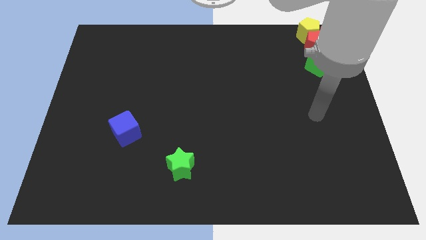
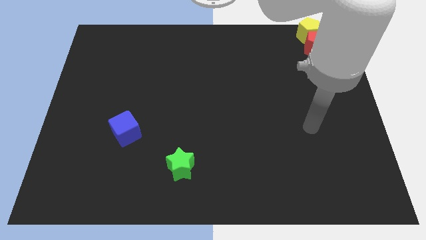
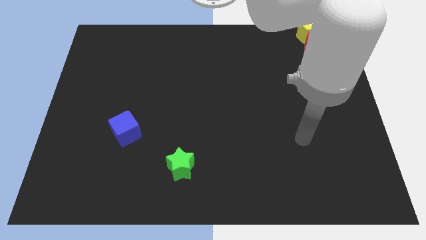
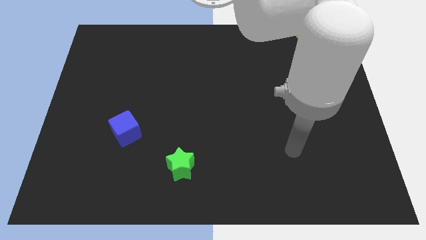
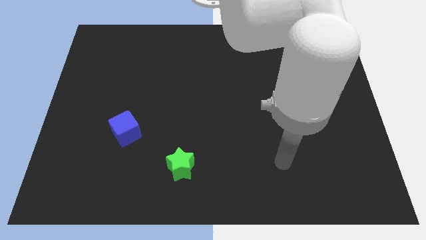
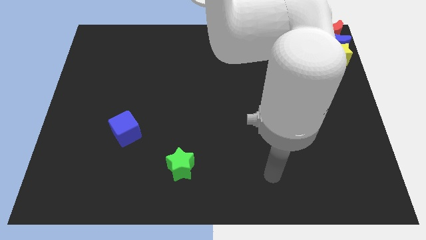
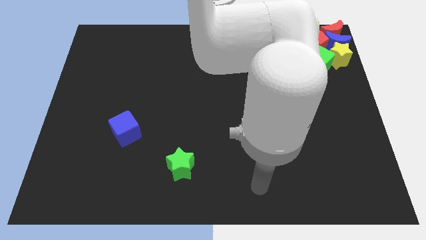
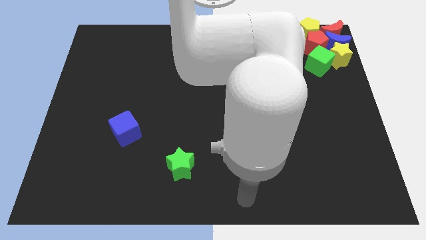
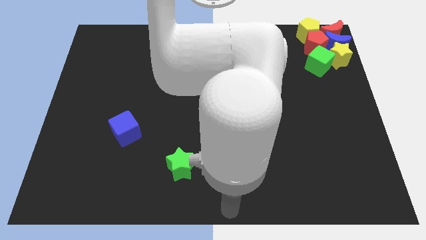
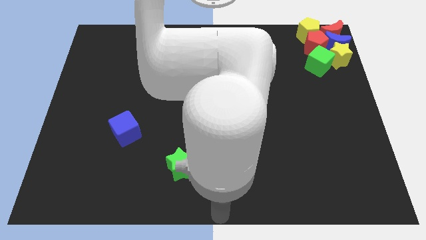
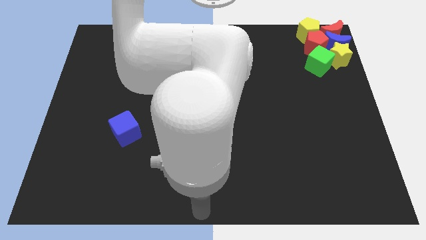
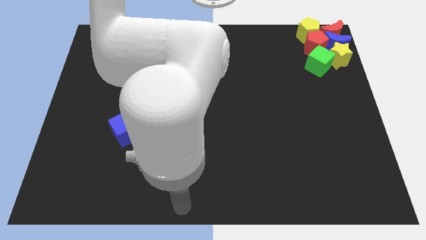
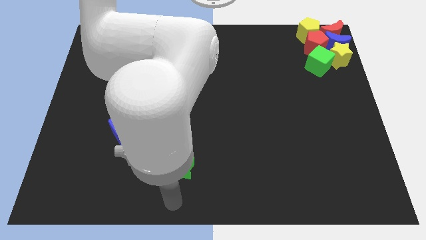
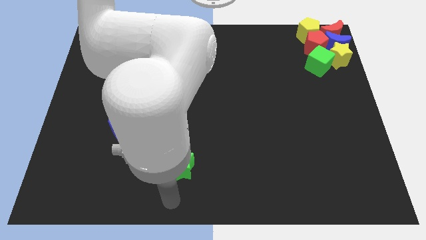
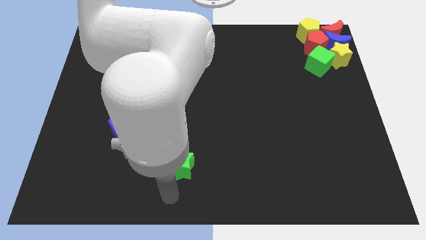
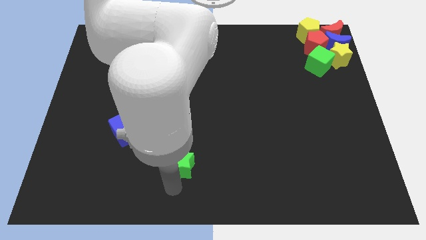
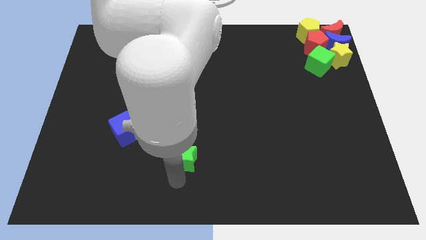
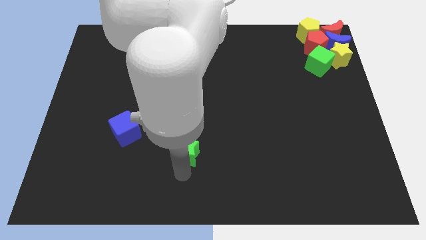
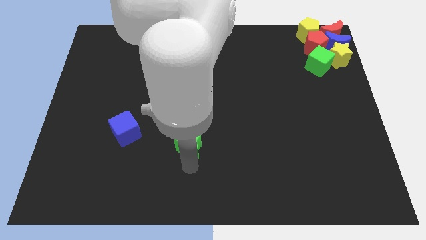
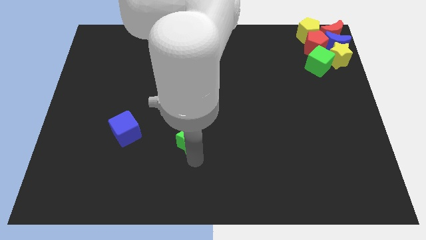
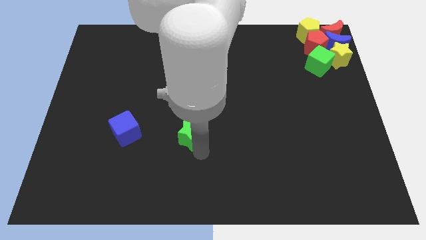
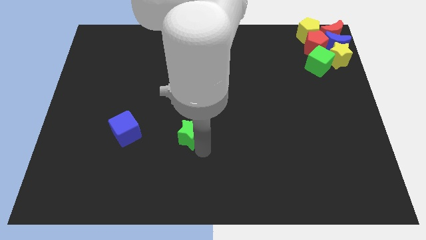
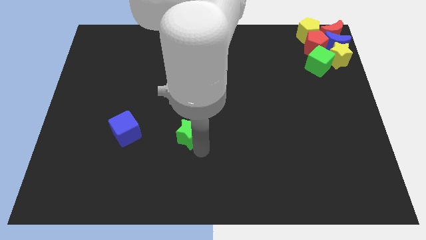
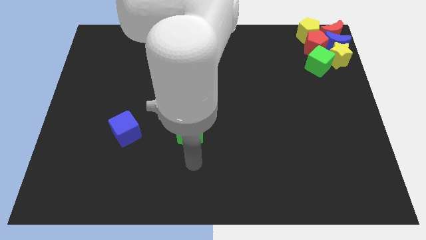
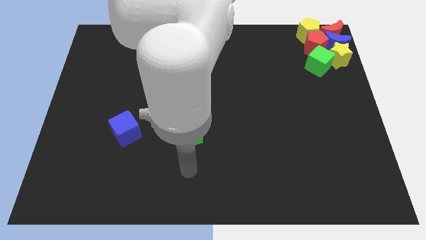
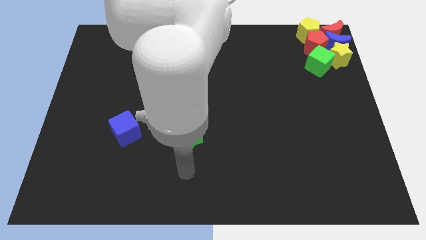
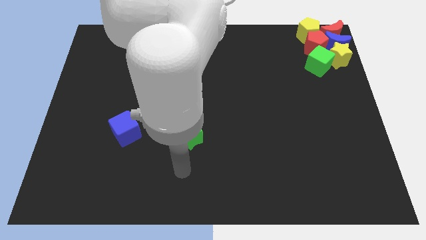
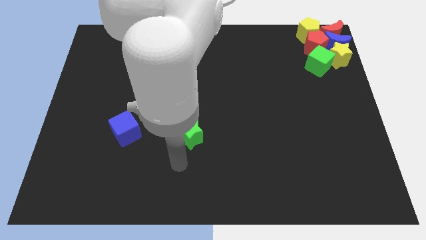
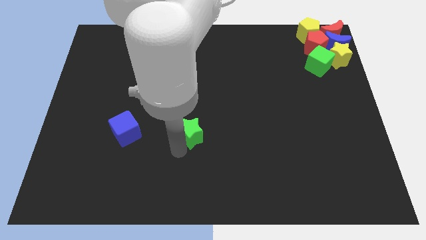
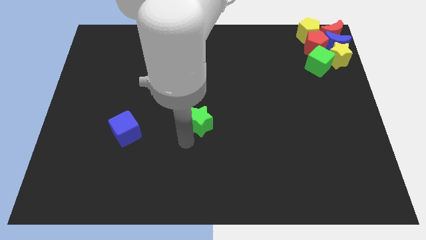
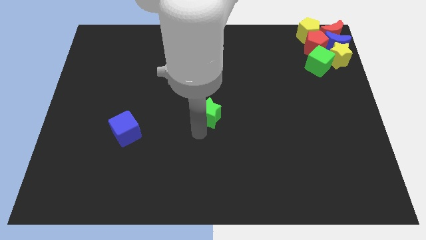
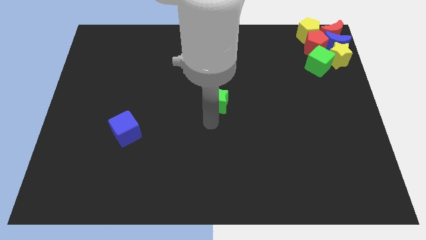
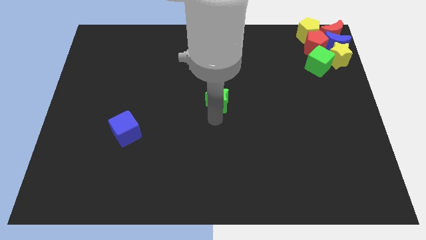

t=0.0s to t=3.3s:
push the green star to the center of the board

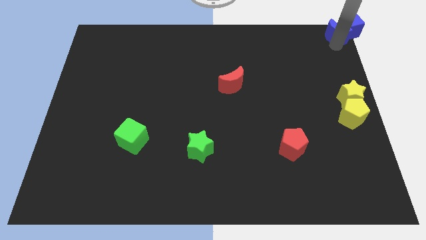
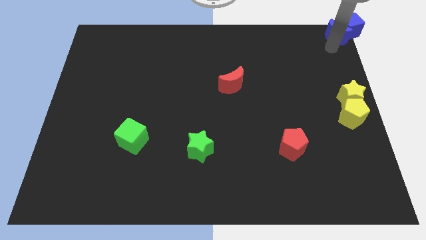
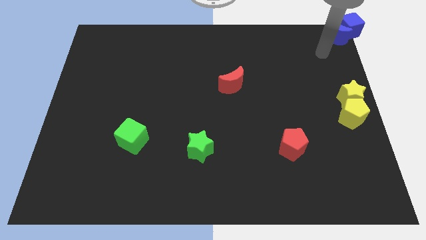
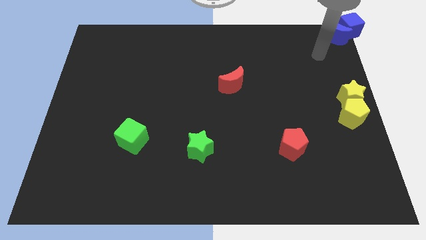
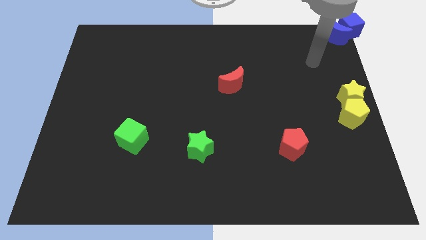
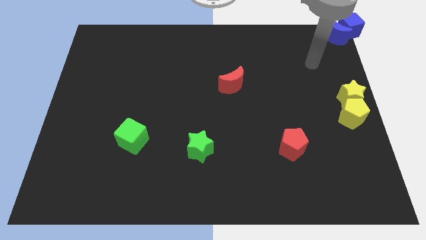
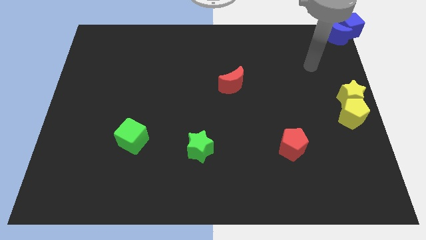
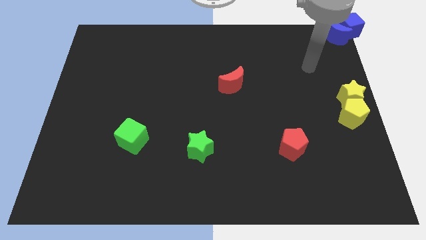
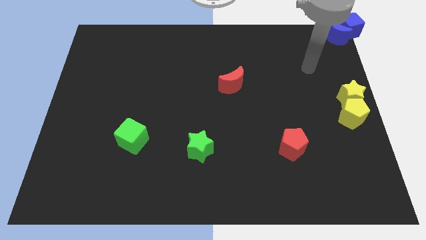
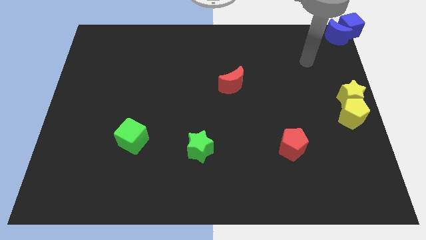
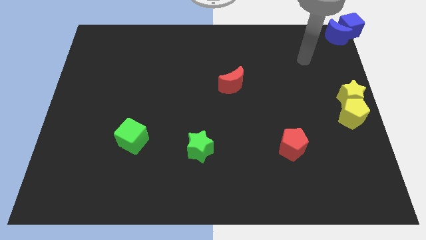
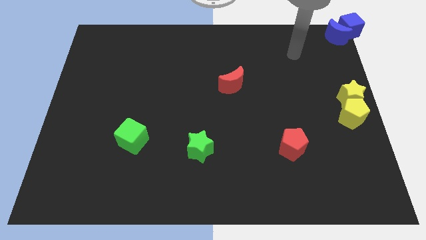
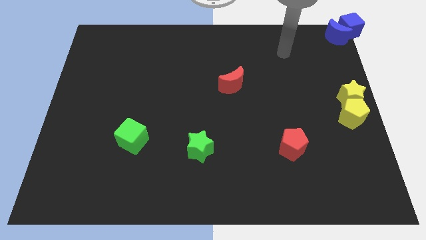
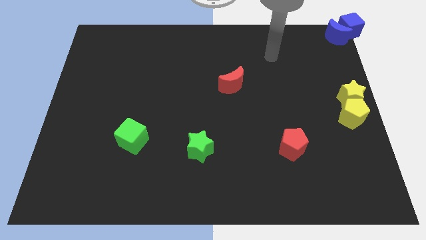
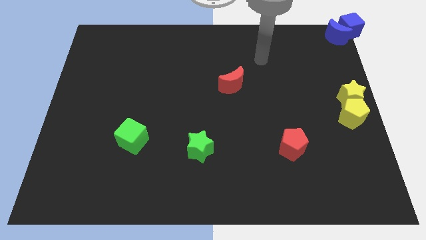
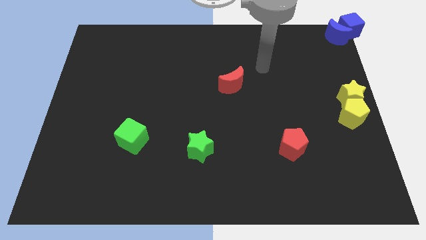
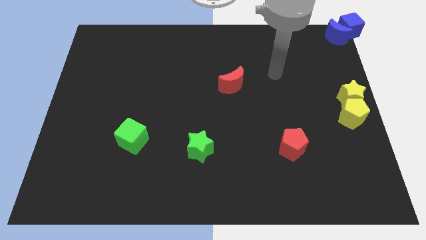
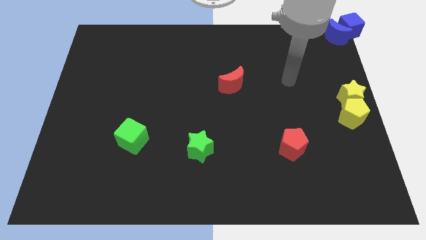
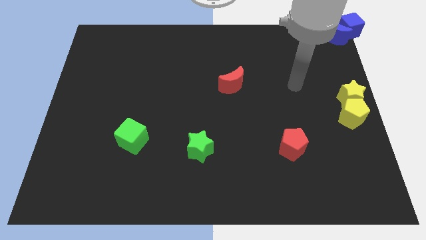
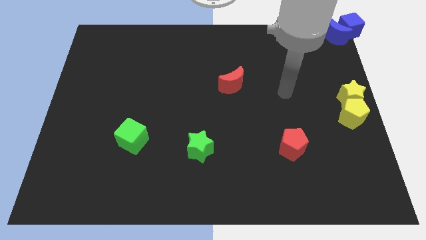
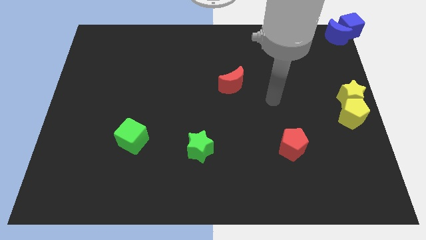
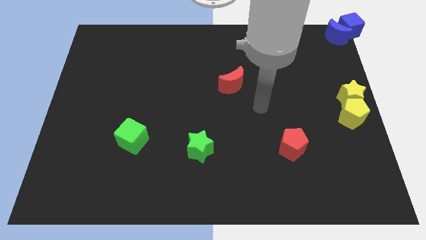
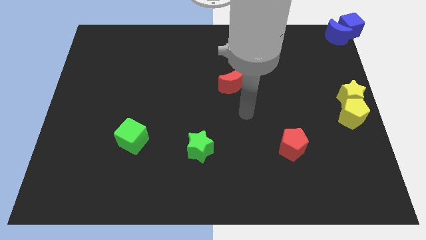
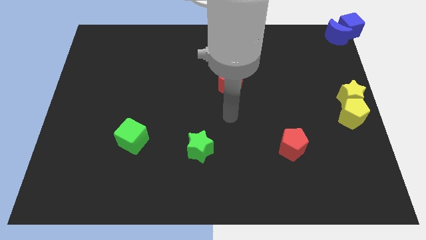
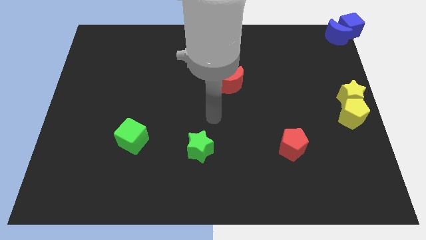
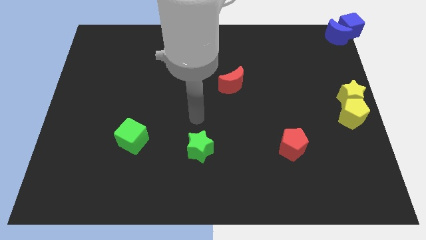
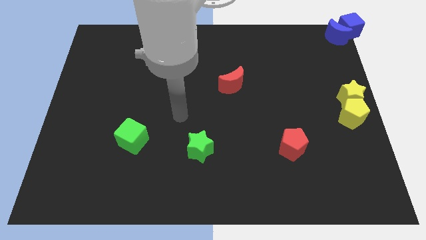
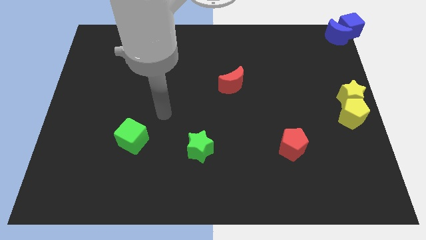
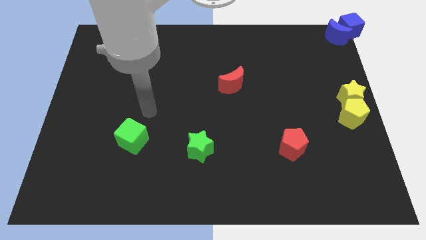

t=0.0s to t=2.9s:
move your arm towards the green cube

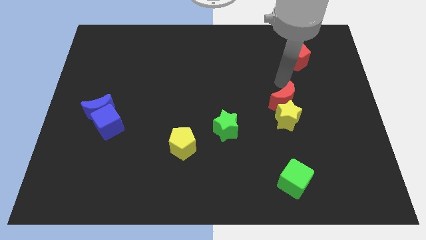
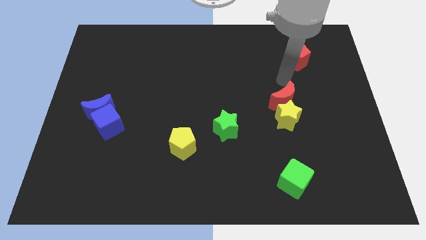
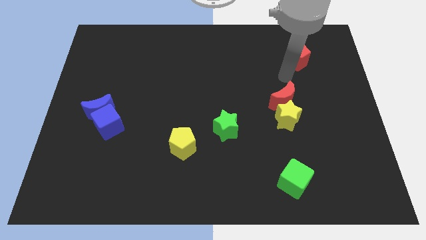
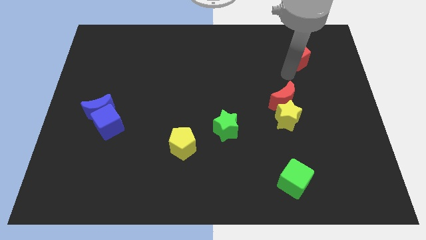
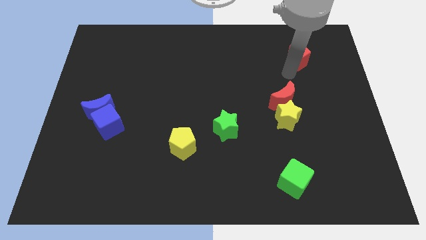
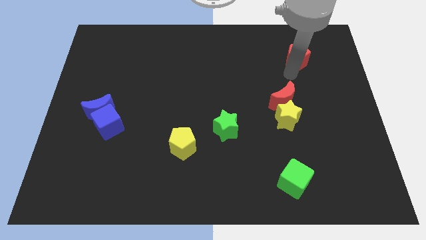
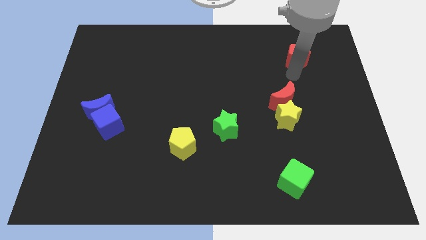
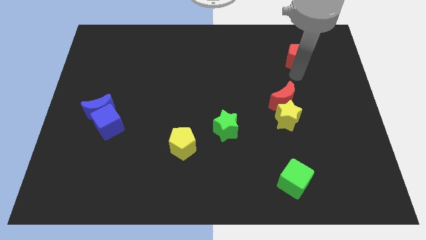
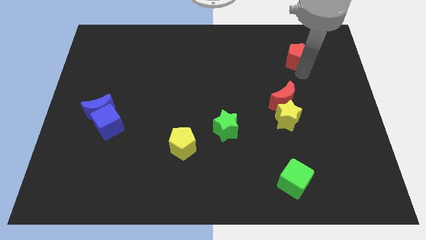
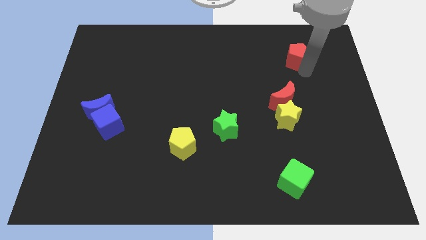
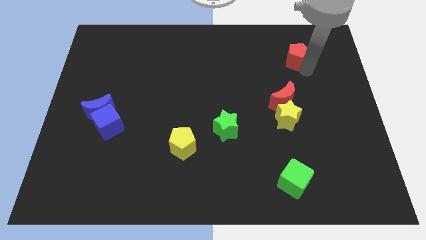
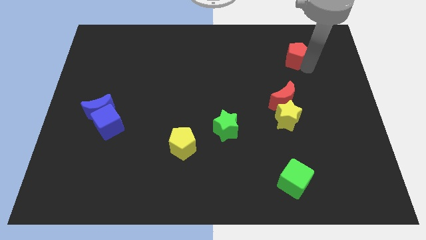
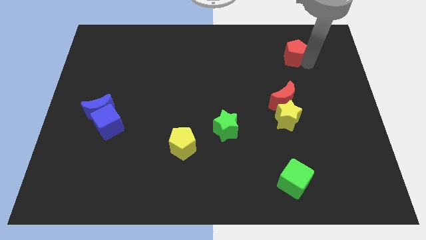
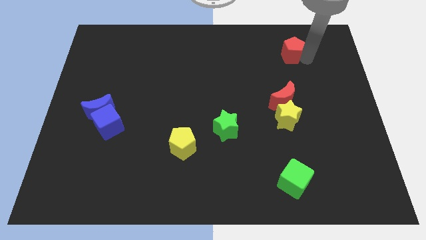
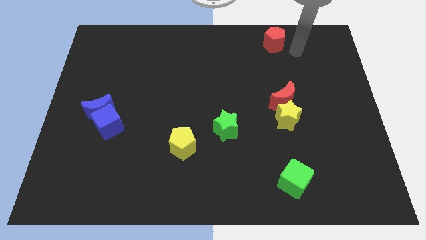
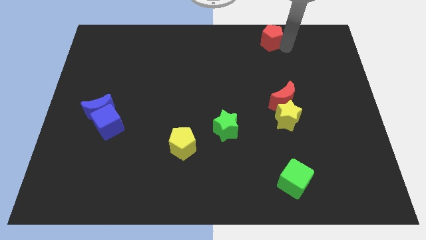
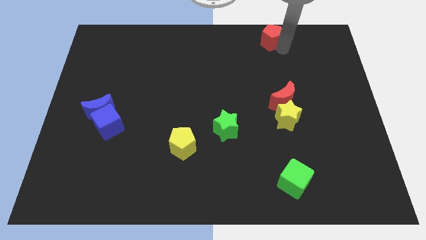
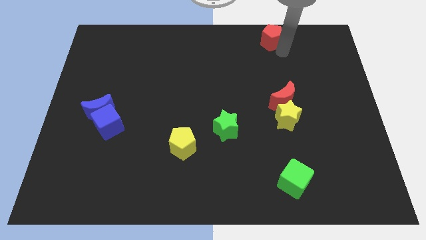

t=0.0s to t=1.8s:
push the red pentagon to the top of the red crescent

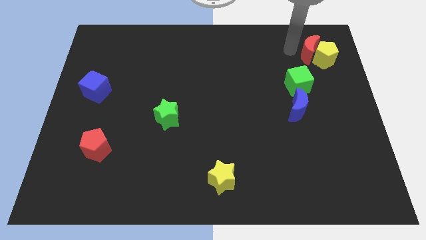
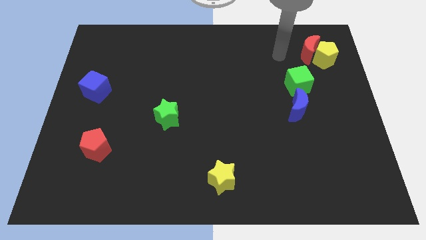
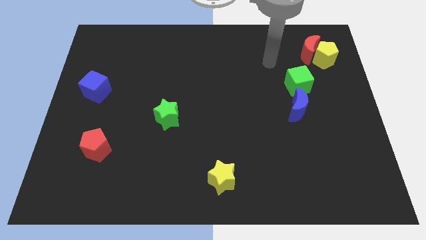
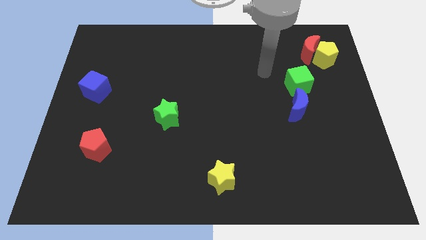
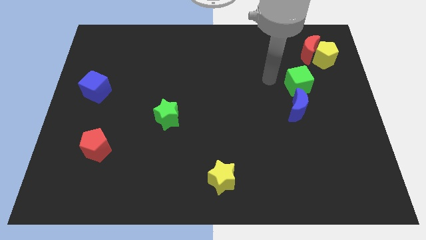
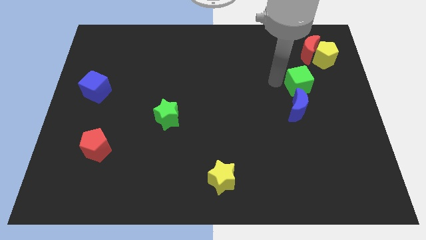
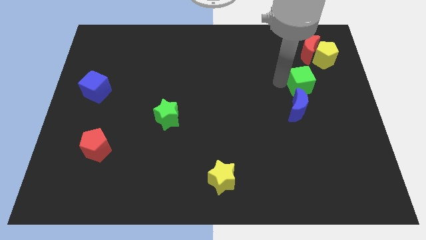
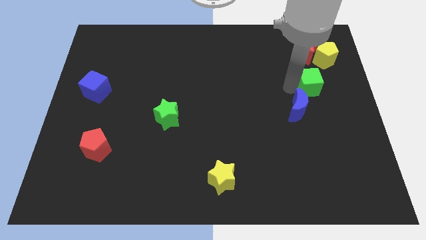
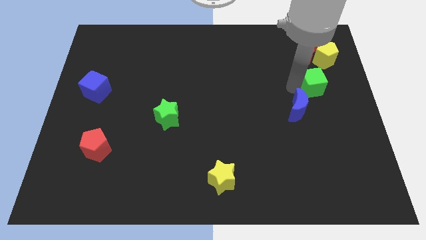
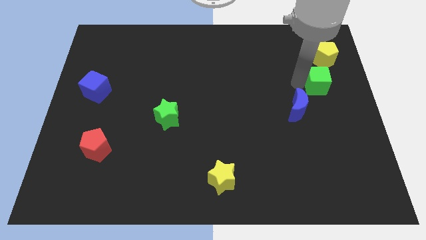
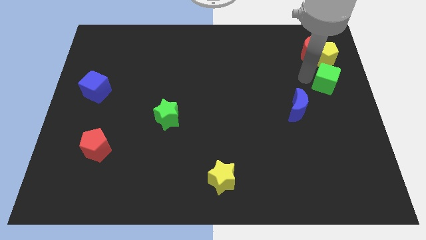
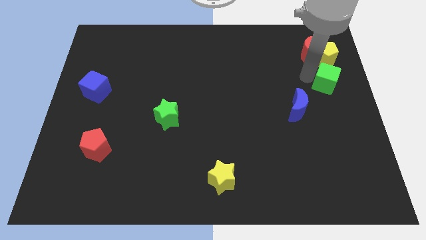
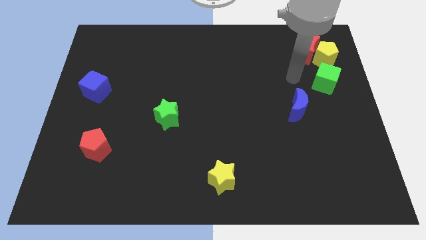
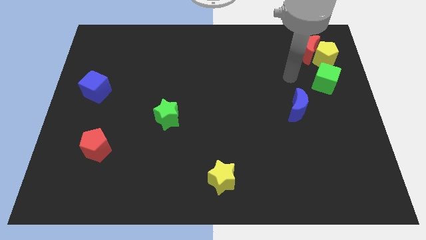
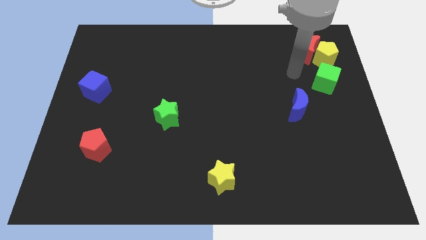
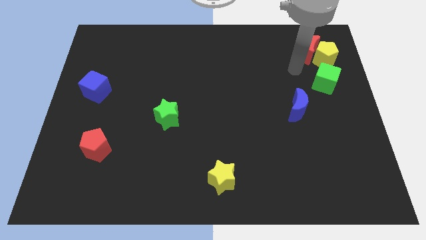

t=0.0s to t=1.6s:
put the green cube below the yellow pentagon
